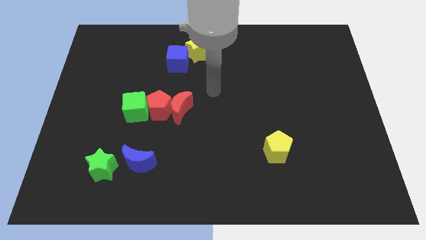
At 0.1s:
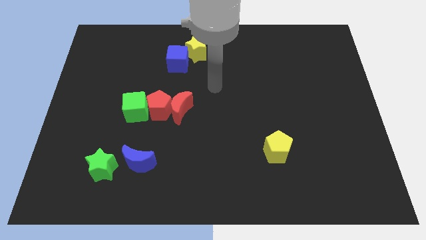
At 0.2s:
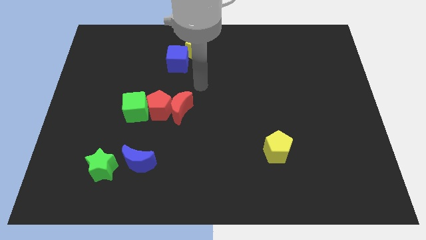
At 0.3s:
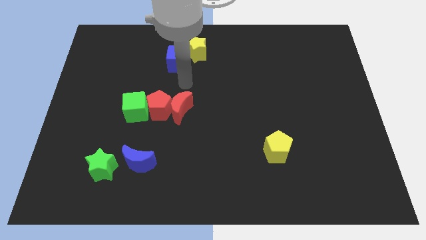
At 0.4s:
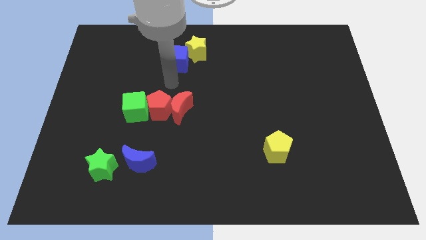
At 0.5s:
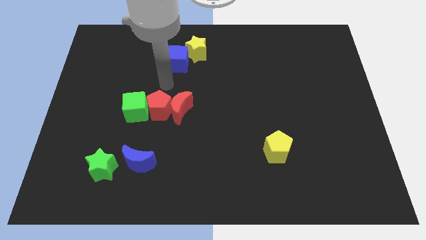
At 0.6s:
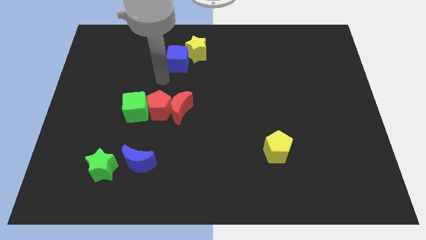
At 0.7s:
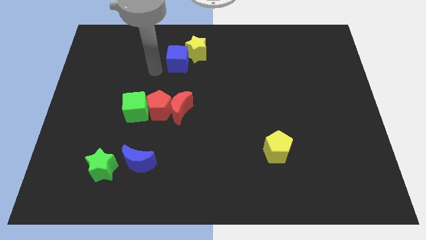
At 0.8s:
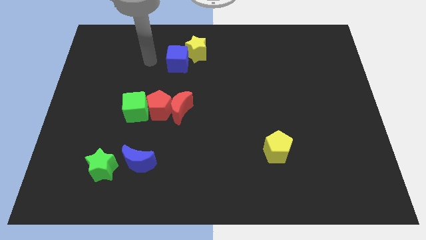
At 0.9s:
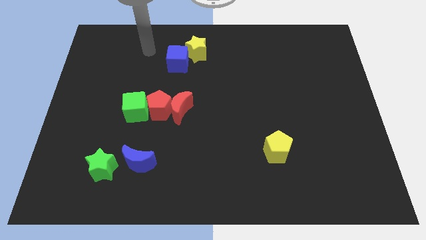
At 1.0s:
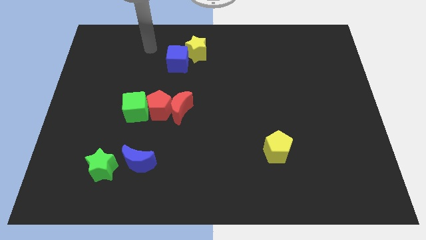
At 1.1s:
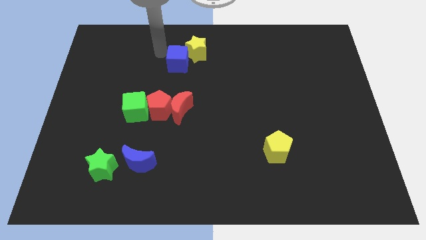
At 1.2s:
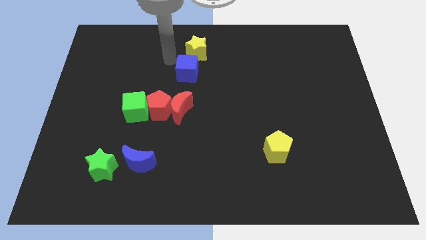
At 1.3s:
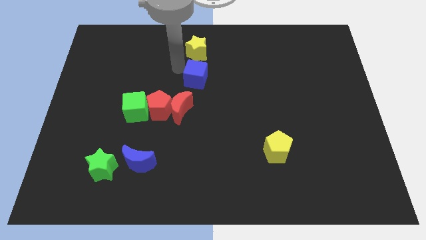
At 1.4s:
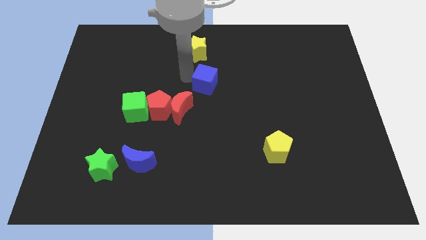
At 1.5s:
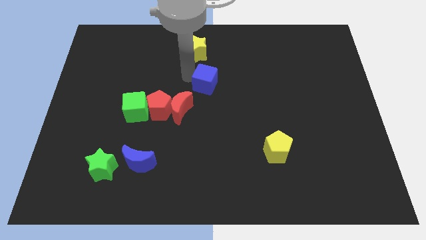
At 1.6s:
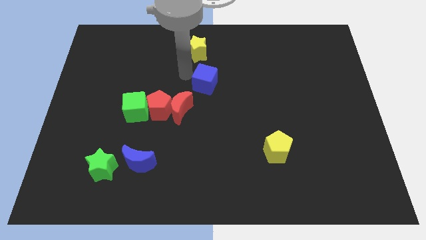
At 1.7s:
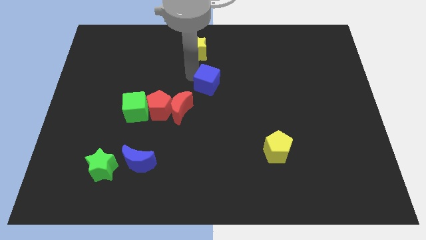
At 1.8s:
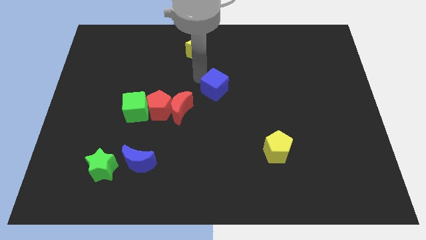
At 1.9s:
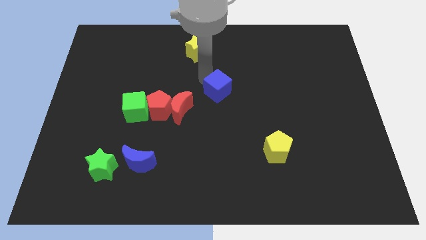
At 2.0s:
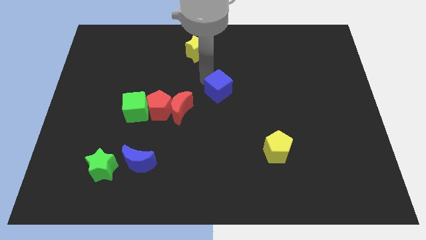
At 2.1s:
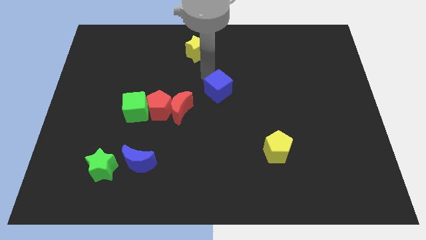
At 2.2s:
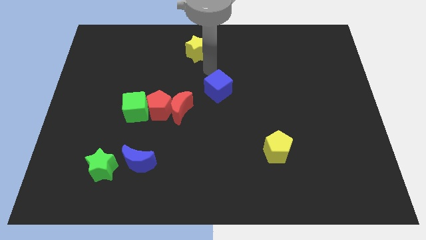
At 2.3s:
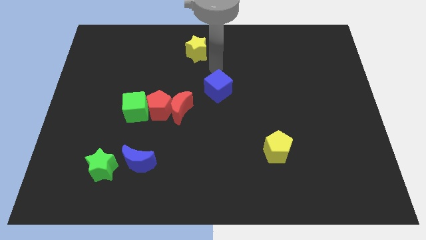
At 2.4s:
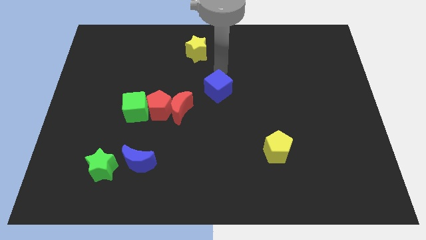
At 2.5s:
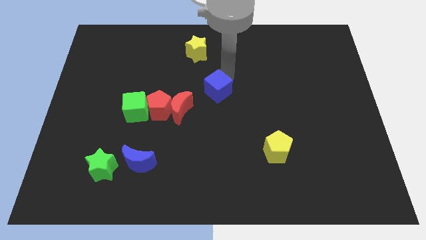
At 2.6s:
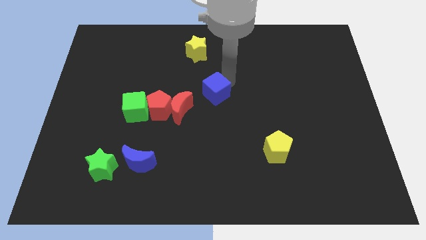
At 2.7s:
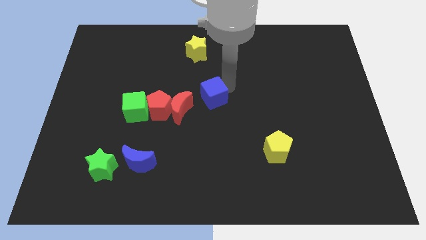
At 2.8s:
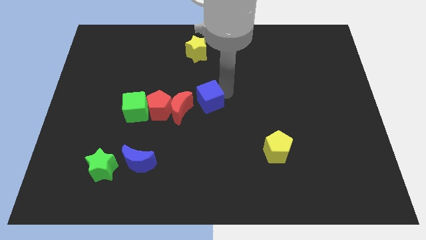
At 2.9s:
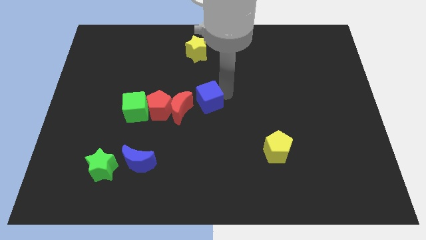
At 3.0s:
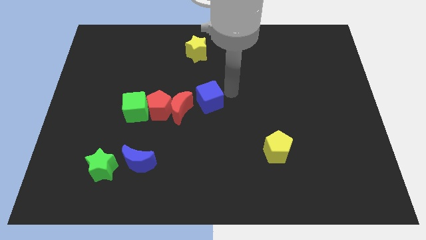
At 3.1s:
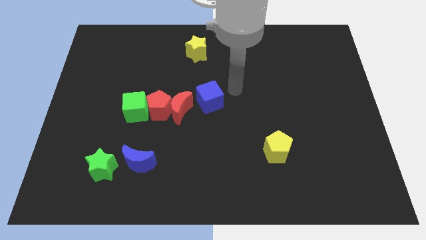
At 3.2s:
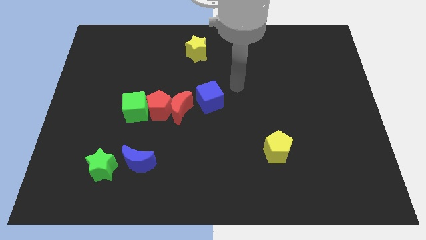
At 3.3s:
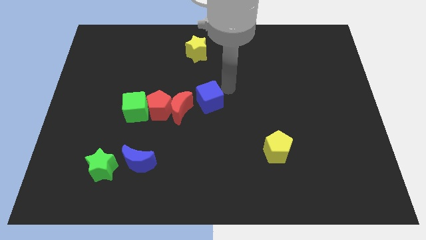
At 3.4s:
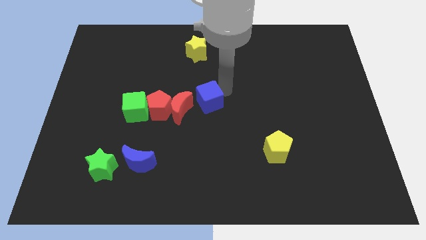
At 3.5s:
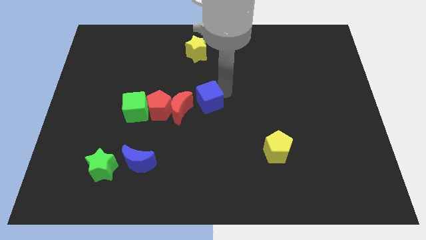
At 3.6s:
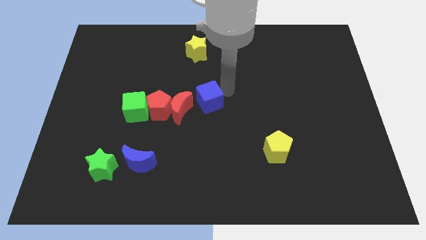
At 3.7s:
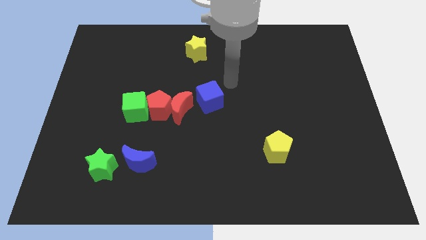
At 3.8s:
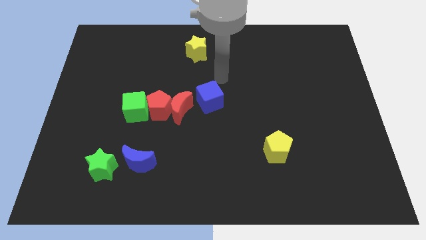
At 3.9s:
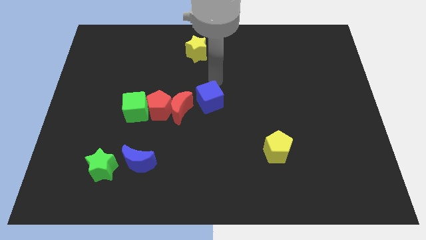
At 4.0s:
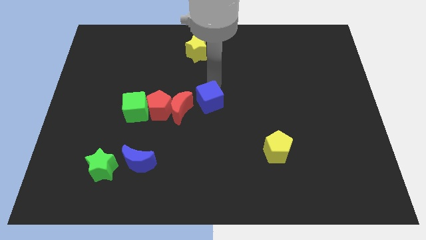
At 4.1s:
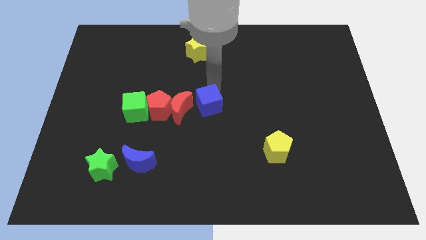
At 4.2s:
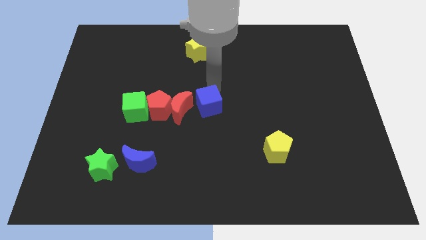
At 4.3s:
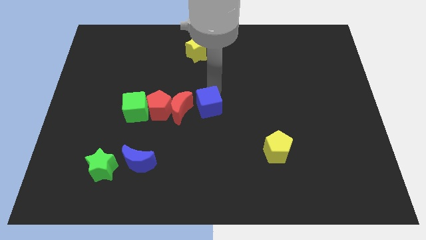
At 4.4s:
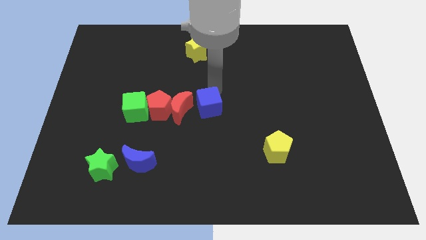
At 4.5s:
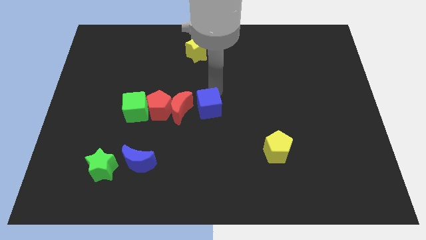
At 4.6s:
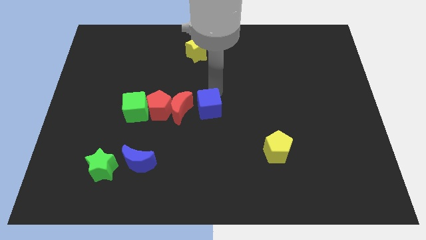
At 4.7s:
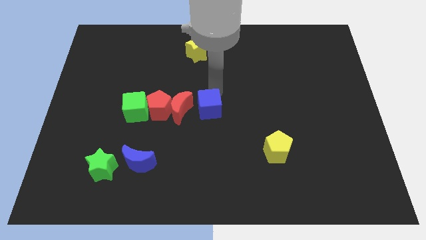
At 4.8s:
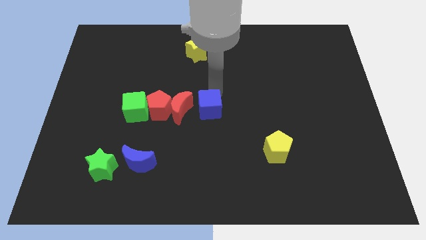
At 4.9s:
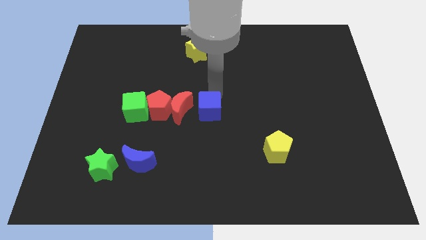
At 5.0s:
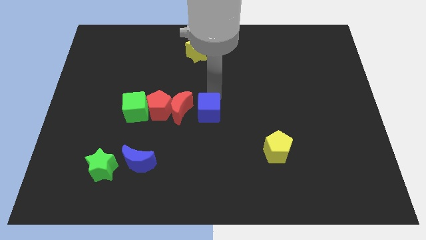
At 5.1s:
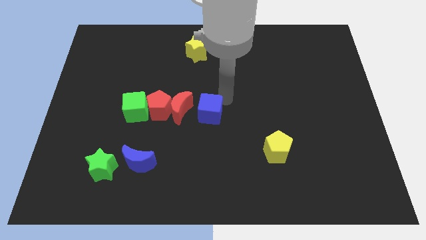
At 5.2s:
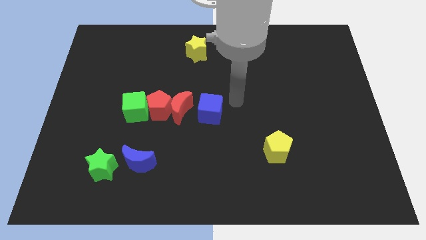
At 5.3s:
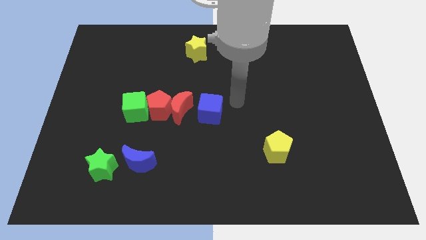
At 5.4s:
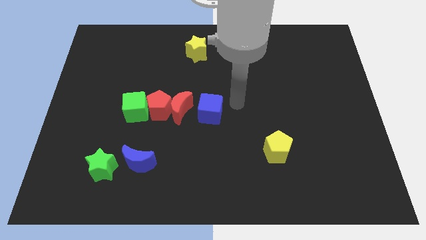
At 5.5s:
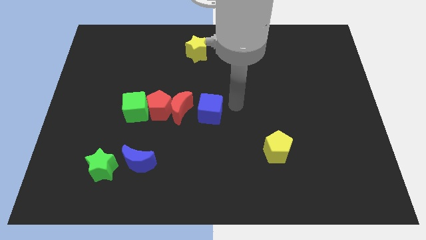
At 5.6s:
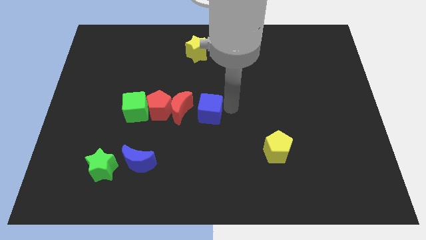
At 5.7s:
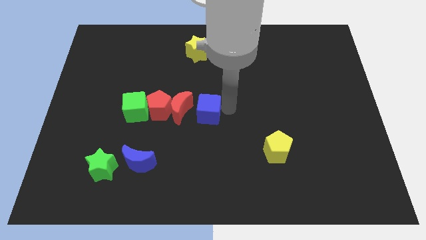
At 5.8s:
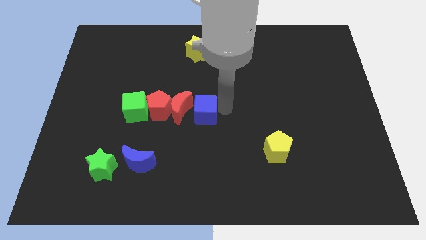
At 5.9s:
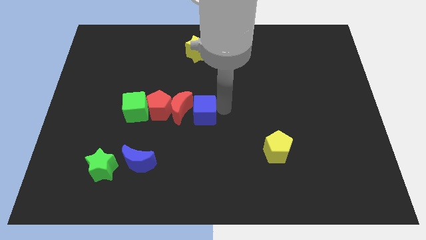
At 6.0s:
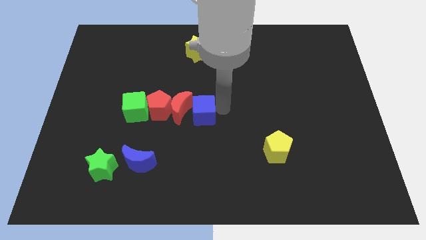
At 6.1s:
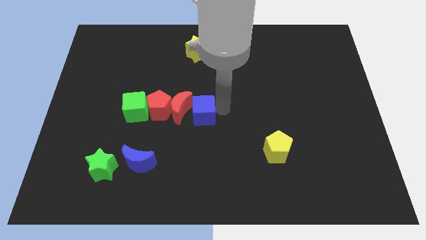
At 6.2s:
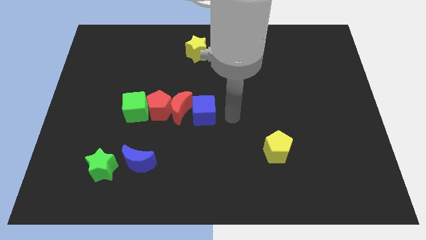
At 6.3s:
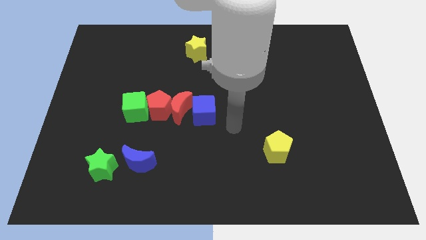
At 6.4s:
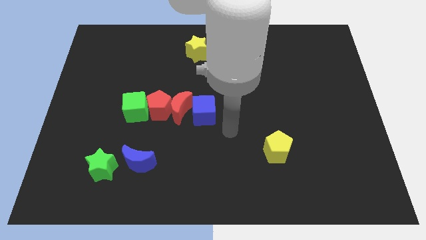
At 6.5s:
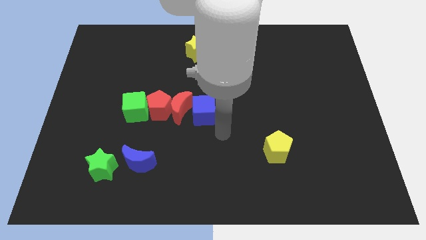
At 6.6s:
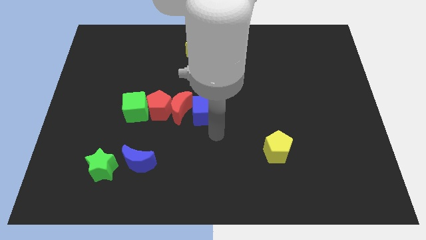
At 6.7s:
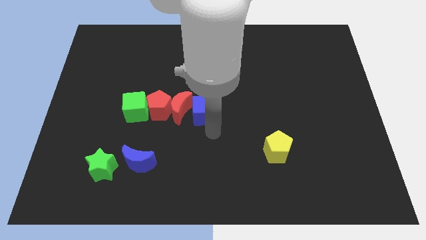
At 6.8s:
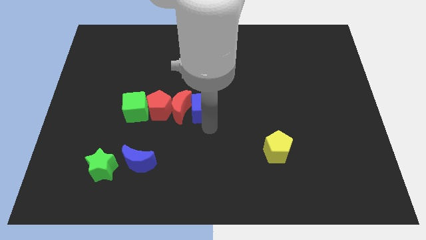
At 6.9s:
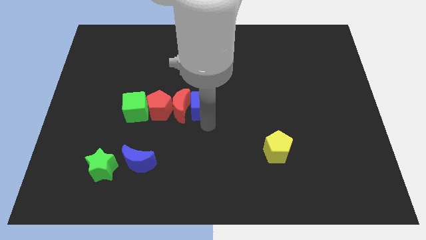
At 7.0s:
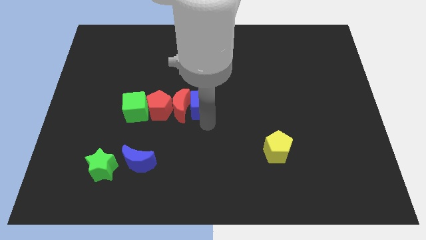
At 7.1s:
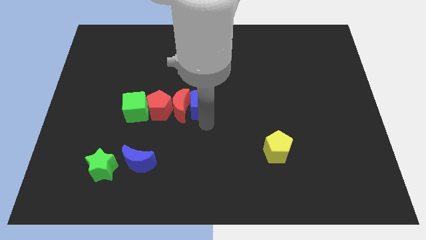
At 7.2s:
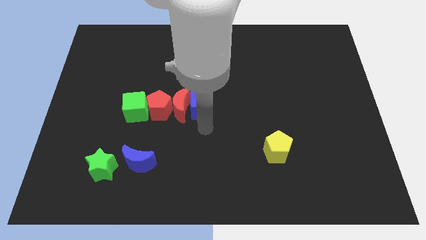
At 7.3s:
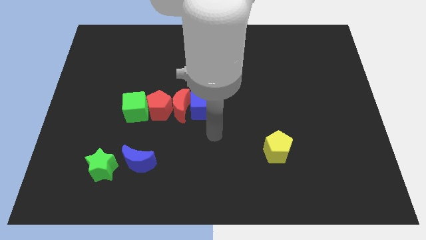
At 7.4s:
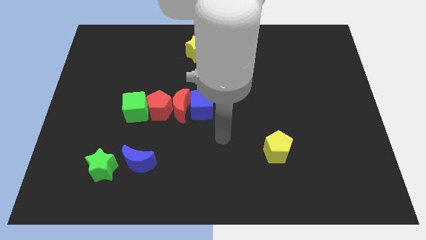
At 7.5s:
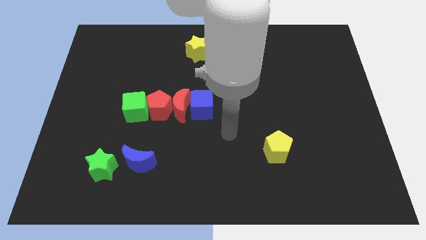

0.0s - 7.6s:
push the blue cube into the right side of the red crescent

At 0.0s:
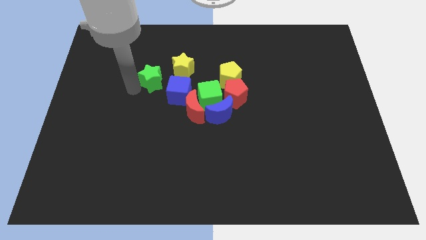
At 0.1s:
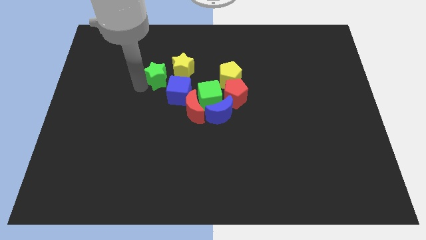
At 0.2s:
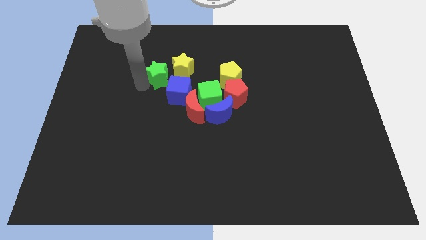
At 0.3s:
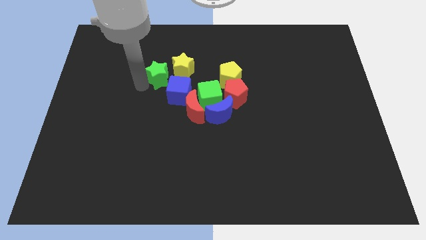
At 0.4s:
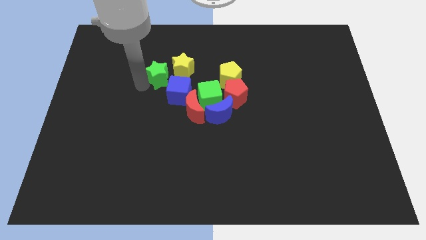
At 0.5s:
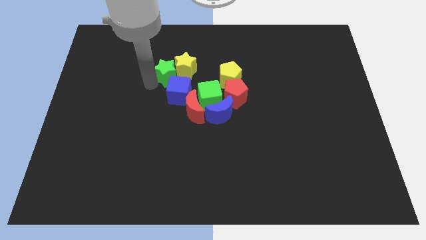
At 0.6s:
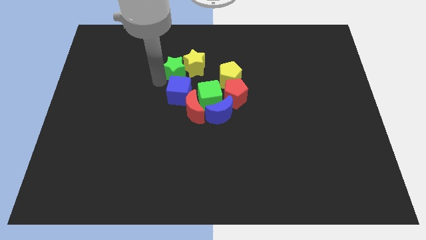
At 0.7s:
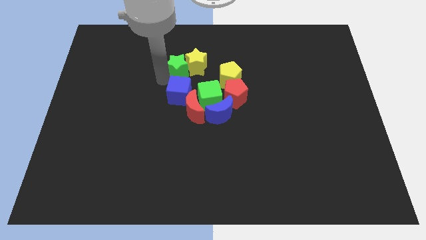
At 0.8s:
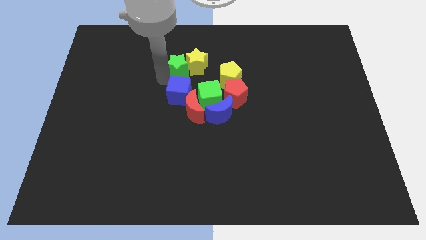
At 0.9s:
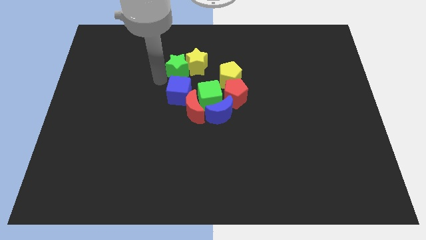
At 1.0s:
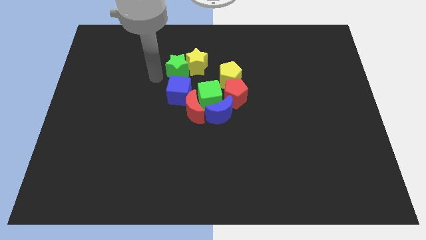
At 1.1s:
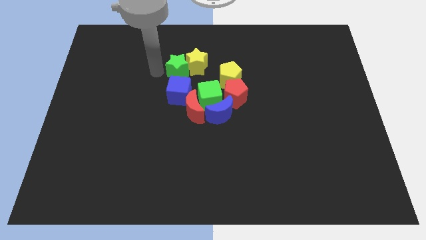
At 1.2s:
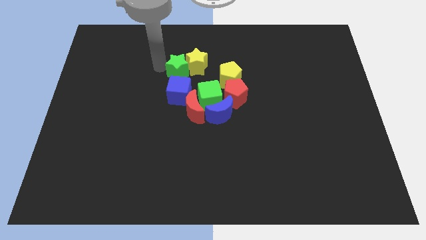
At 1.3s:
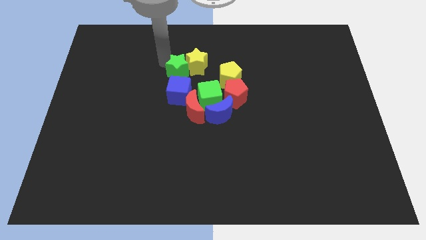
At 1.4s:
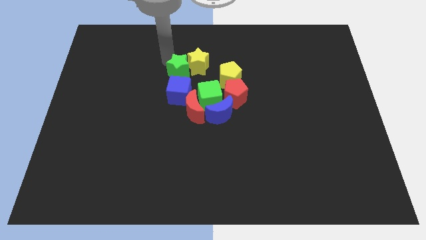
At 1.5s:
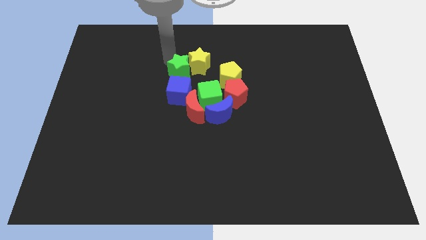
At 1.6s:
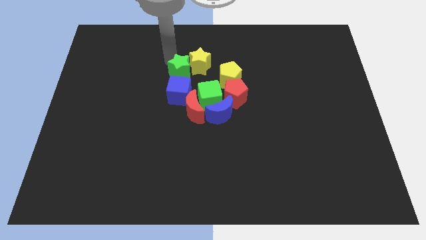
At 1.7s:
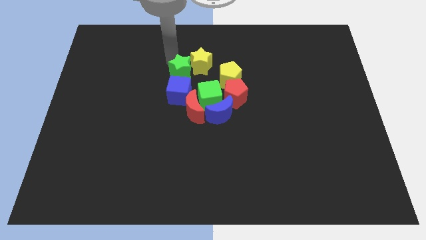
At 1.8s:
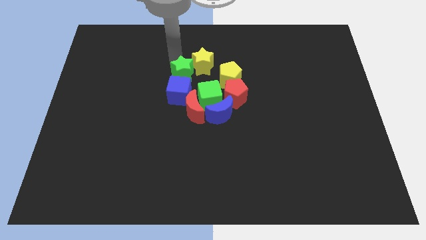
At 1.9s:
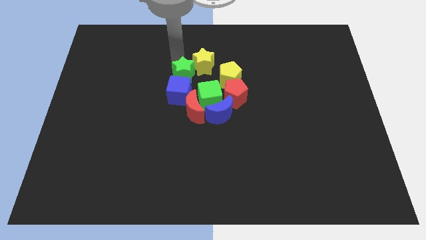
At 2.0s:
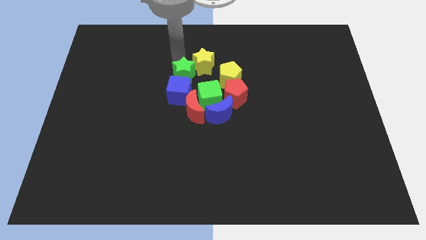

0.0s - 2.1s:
move the green star into the yellow star
